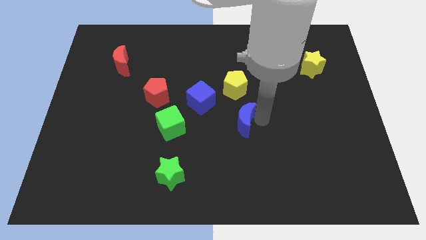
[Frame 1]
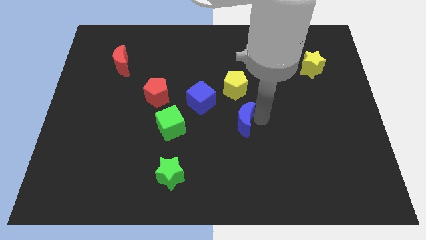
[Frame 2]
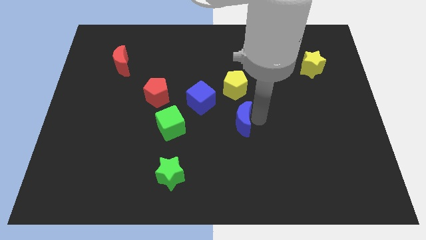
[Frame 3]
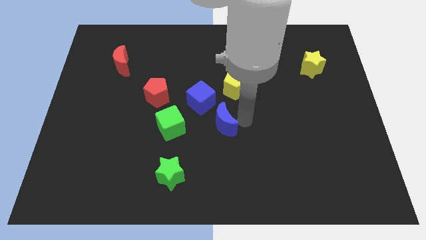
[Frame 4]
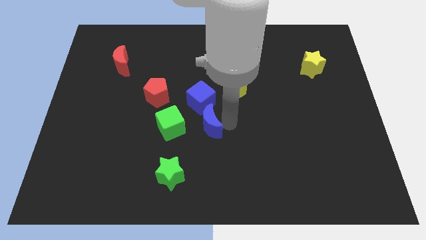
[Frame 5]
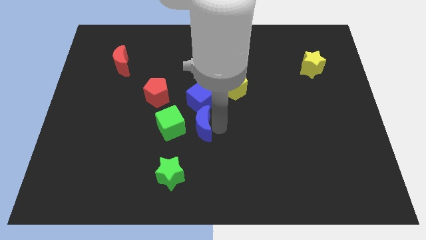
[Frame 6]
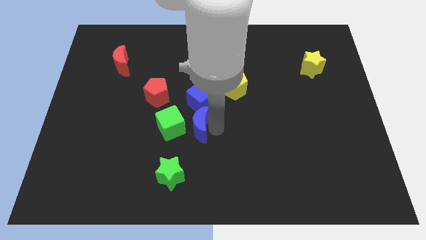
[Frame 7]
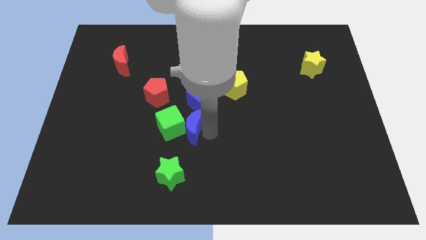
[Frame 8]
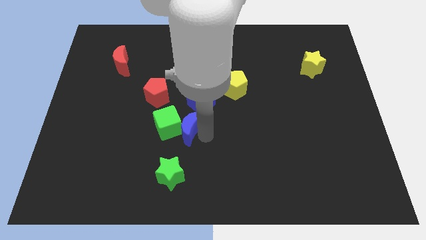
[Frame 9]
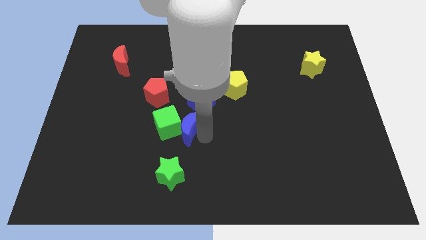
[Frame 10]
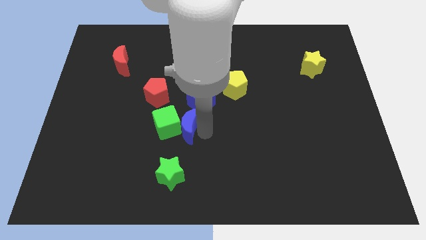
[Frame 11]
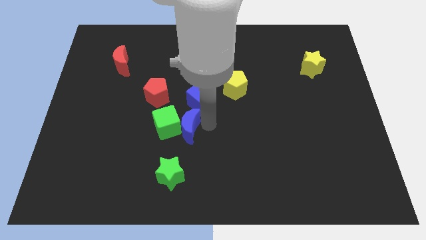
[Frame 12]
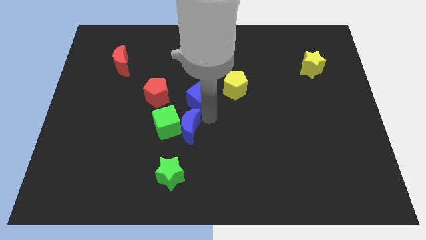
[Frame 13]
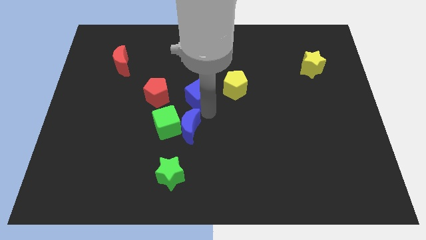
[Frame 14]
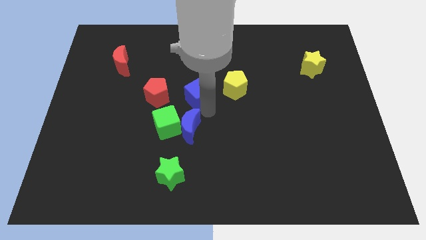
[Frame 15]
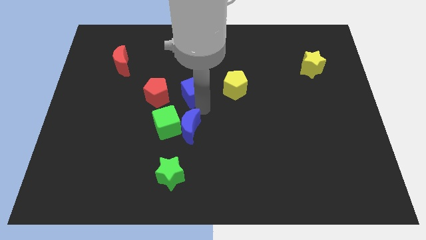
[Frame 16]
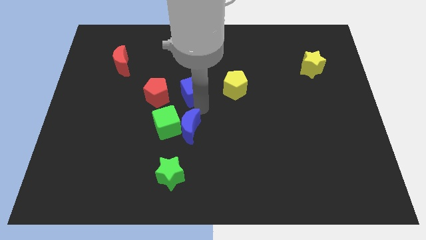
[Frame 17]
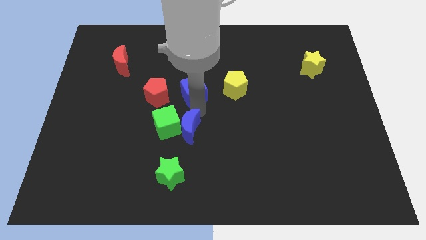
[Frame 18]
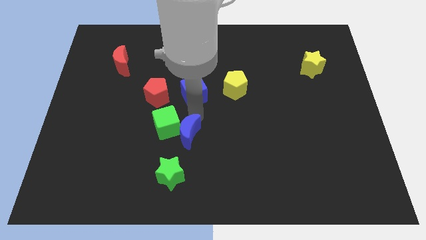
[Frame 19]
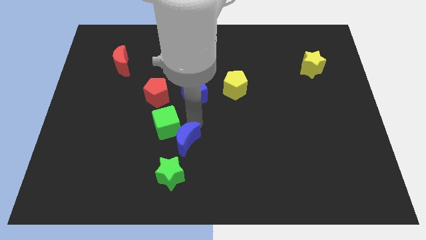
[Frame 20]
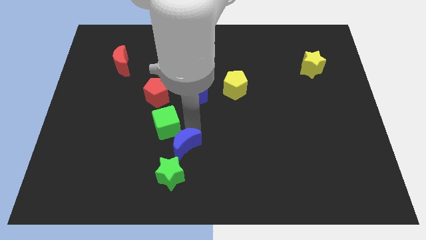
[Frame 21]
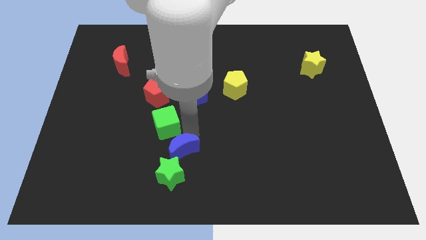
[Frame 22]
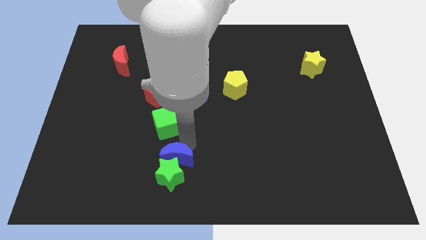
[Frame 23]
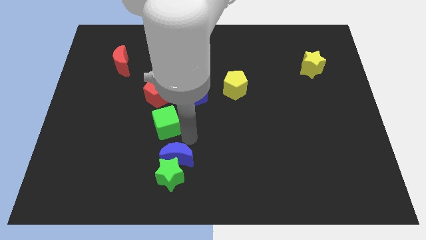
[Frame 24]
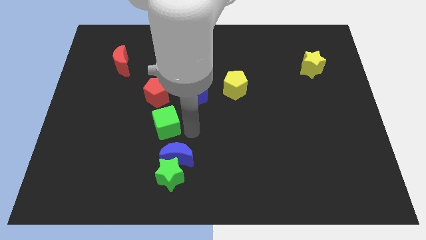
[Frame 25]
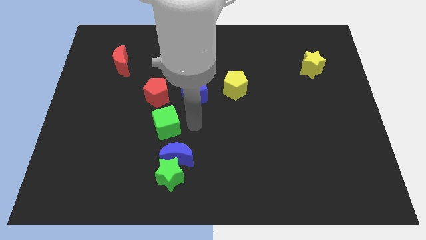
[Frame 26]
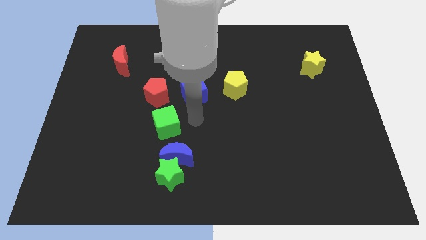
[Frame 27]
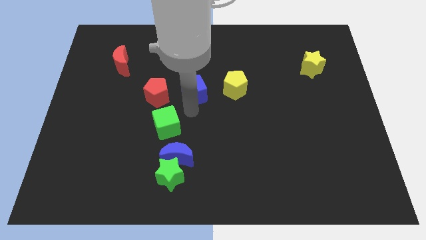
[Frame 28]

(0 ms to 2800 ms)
place blue crescent above green star

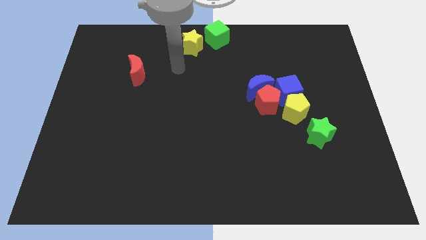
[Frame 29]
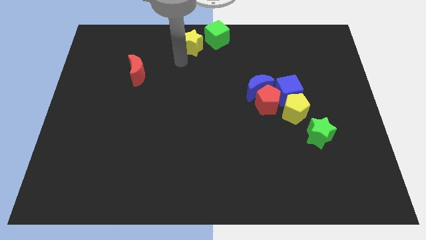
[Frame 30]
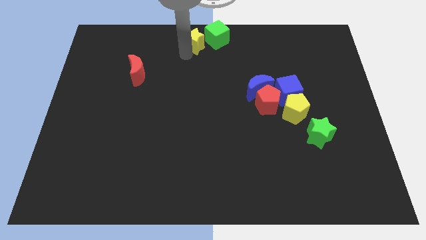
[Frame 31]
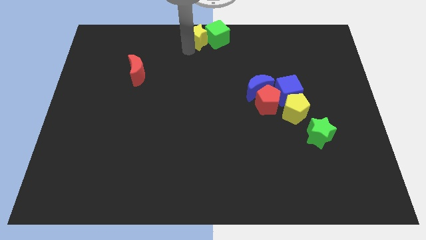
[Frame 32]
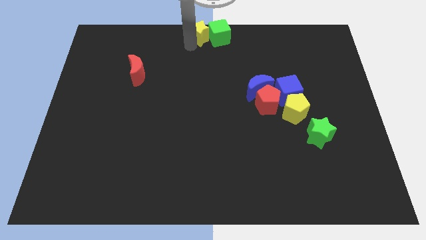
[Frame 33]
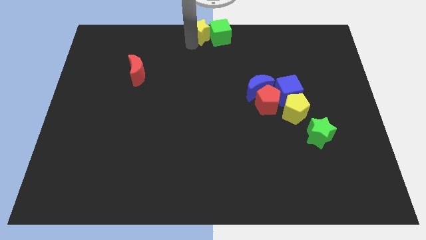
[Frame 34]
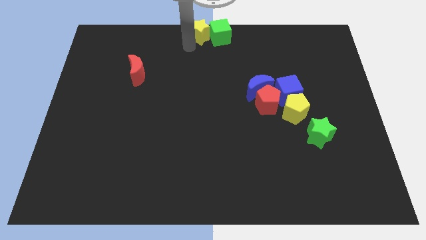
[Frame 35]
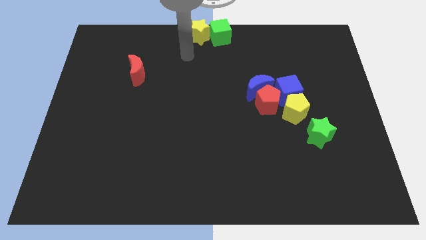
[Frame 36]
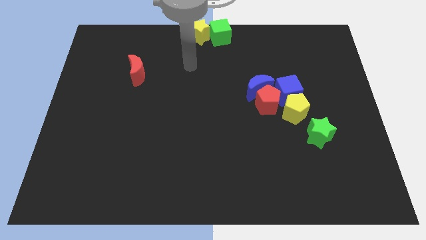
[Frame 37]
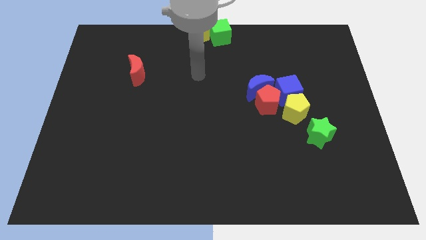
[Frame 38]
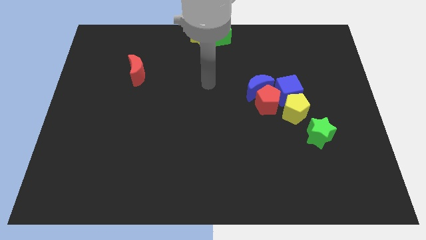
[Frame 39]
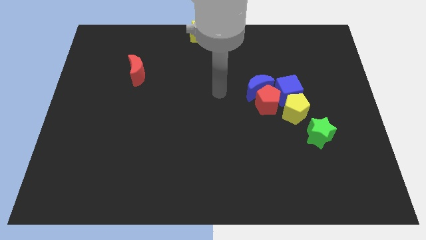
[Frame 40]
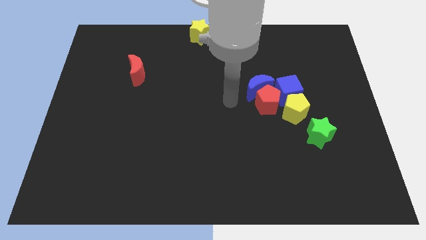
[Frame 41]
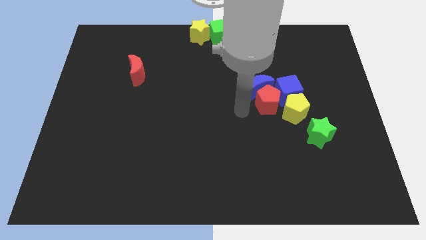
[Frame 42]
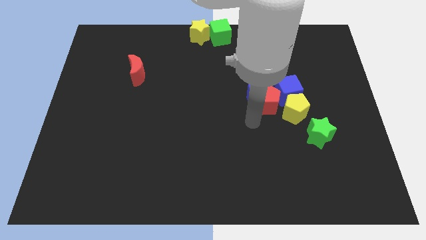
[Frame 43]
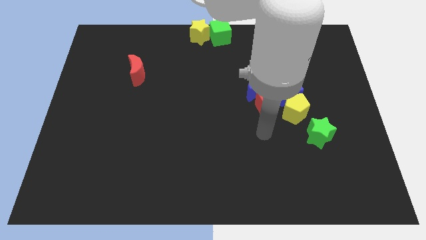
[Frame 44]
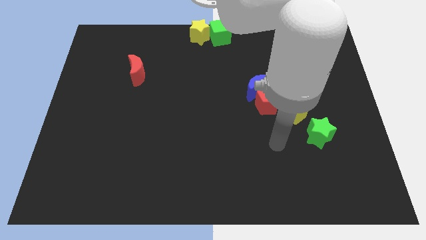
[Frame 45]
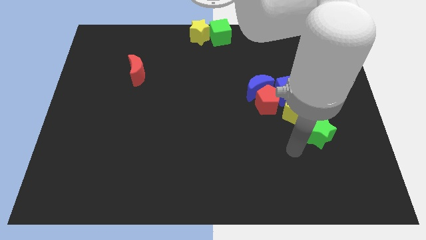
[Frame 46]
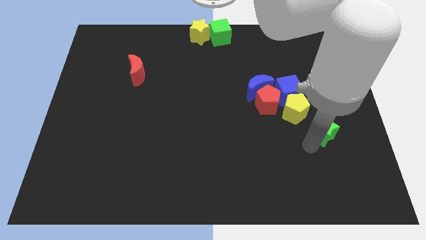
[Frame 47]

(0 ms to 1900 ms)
push the yellow star into the green cube

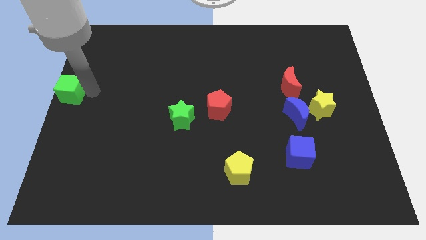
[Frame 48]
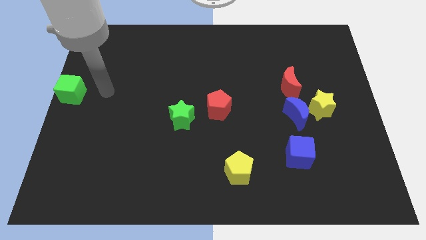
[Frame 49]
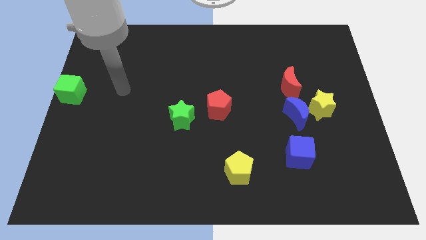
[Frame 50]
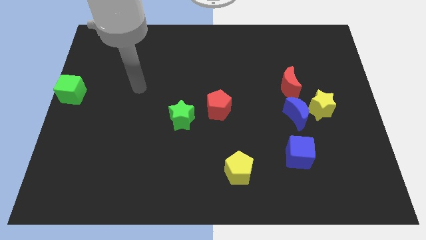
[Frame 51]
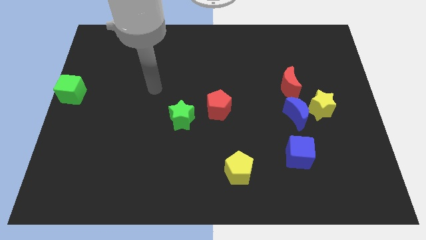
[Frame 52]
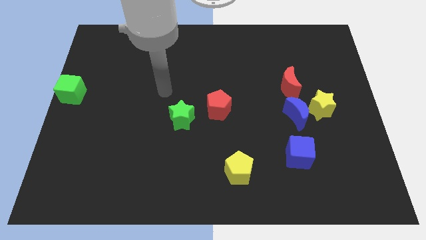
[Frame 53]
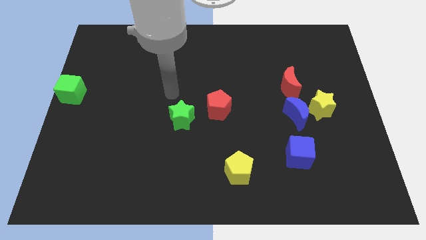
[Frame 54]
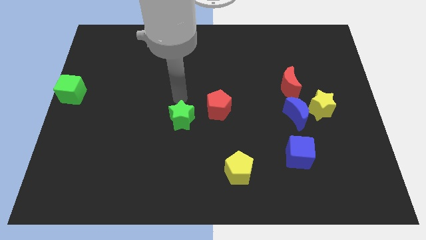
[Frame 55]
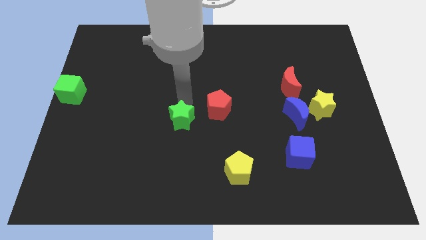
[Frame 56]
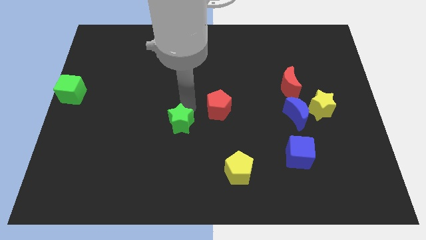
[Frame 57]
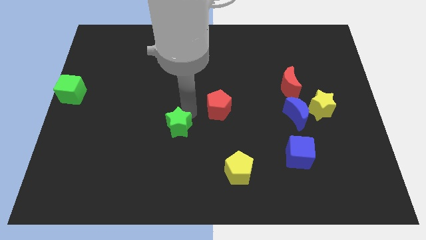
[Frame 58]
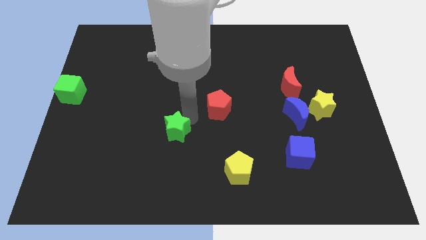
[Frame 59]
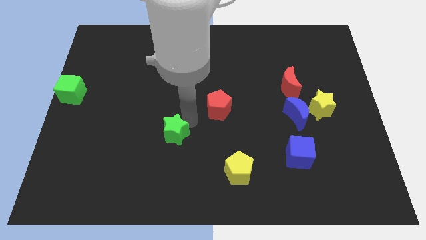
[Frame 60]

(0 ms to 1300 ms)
point your arm above green star

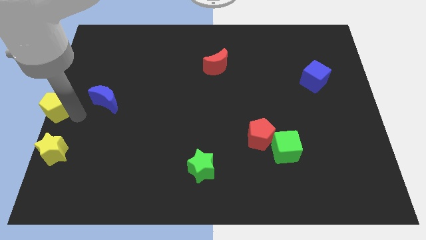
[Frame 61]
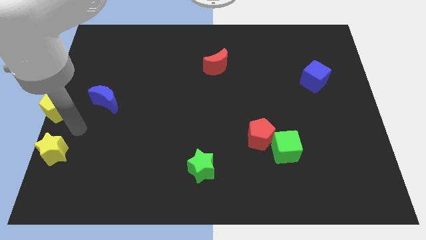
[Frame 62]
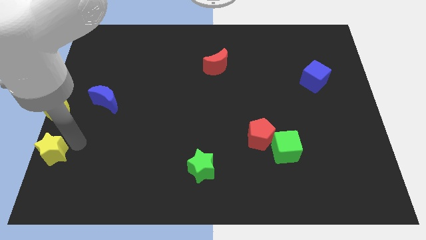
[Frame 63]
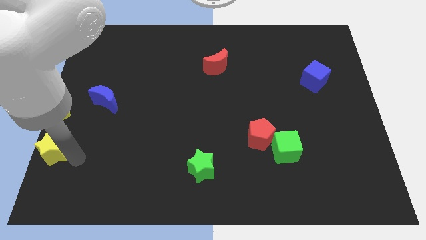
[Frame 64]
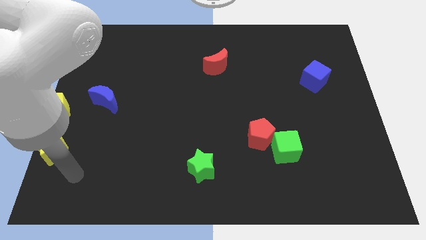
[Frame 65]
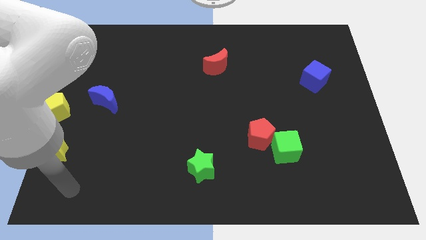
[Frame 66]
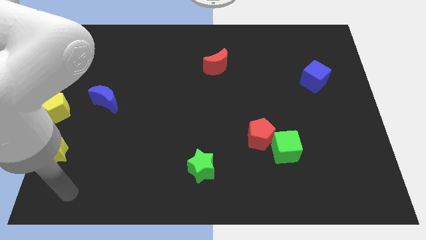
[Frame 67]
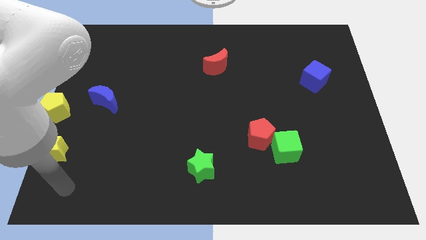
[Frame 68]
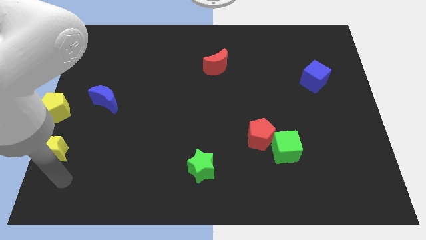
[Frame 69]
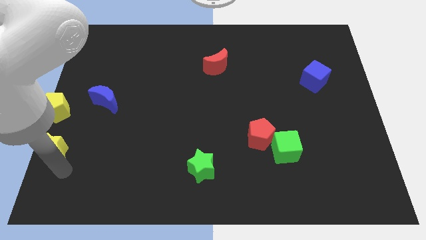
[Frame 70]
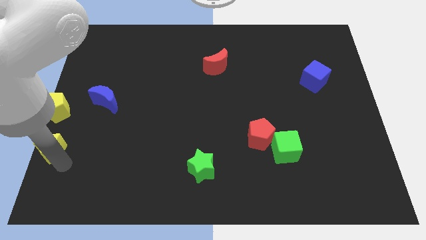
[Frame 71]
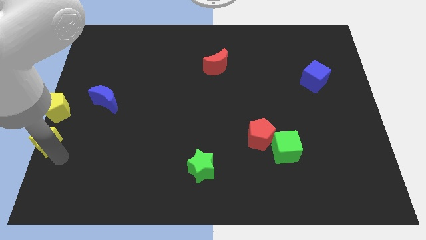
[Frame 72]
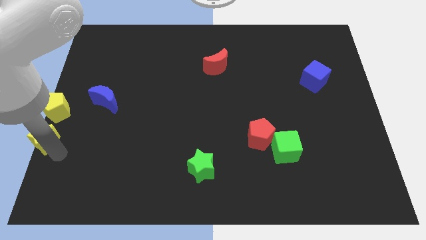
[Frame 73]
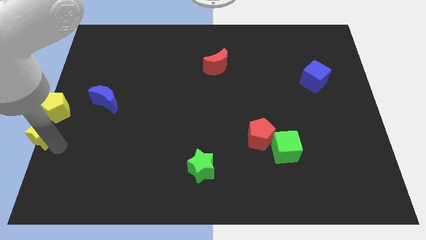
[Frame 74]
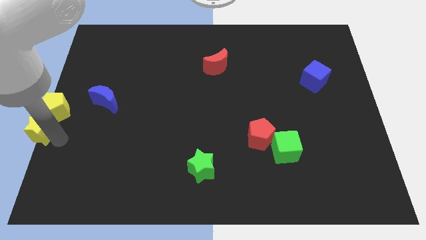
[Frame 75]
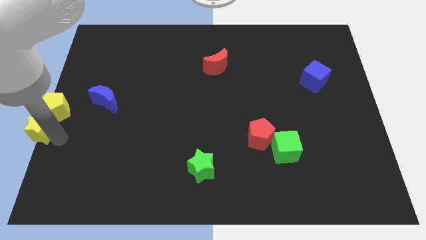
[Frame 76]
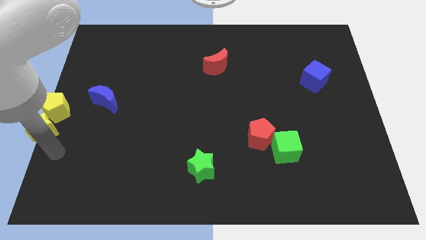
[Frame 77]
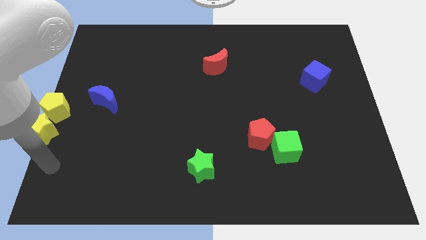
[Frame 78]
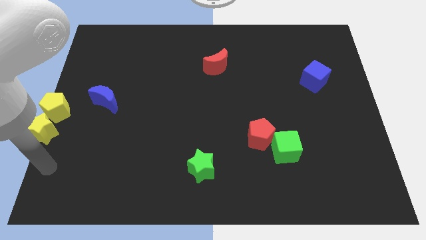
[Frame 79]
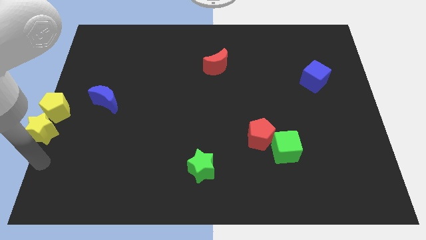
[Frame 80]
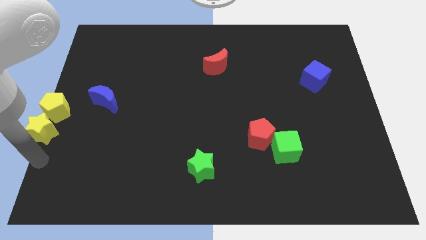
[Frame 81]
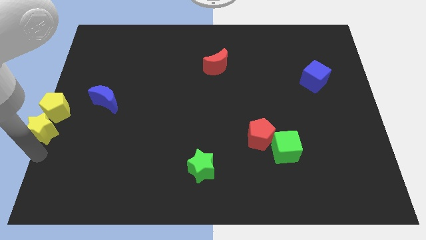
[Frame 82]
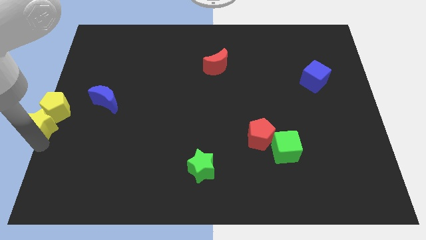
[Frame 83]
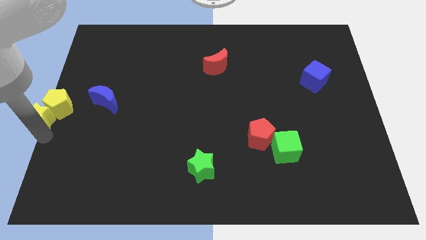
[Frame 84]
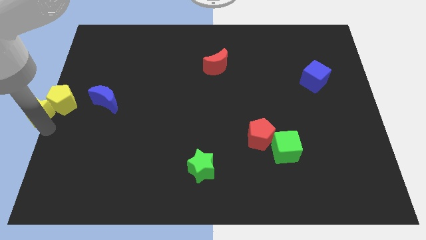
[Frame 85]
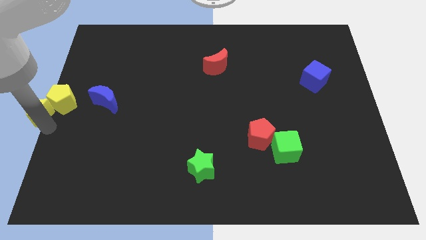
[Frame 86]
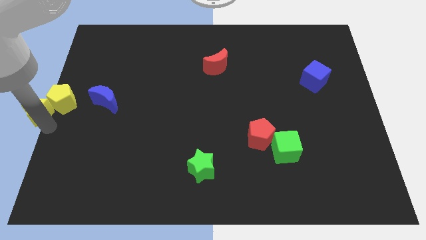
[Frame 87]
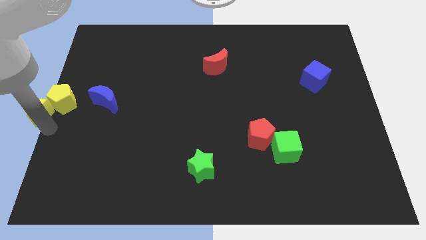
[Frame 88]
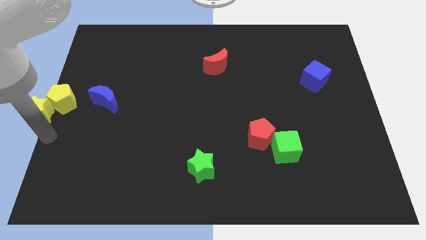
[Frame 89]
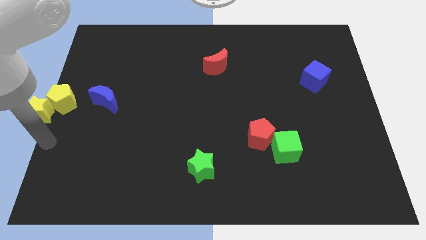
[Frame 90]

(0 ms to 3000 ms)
push the yellow star towards close to the yellow pentagon
